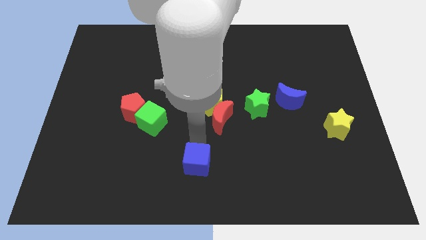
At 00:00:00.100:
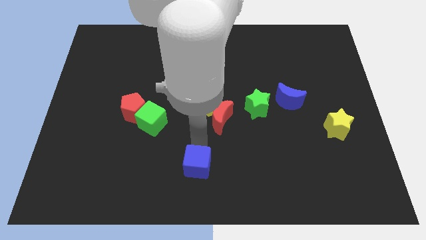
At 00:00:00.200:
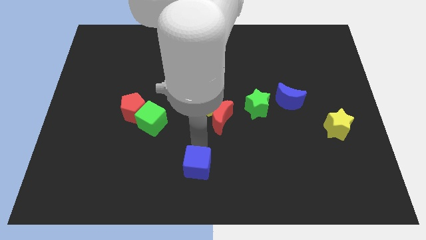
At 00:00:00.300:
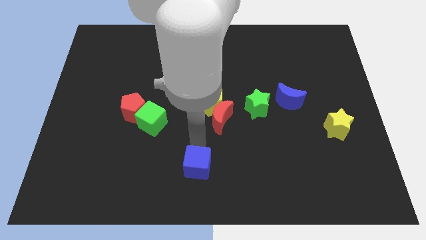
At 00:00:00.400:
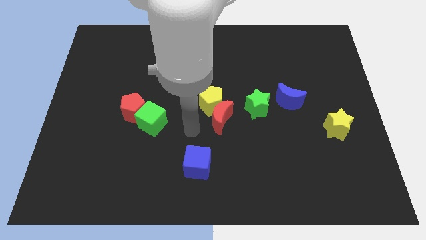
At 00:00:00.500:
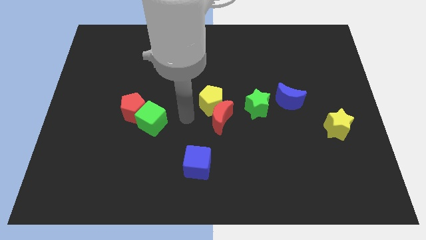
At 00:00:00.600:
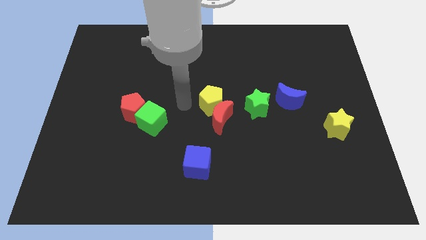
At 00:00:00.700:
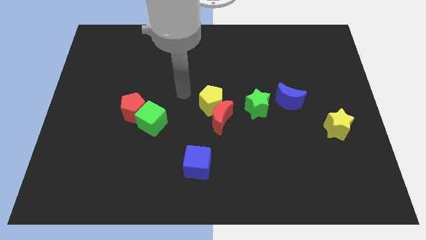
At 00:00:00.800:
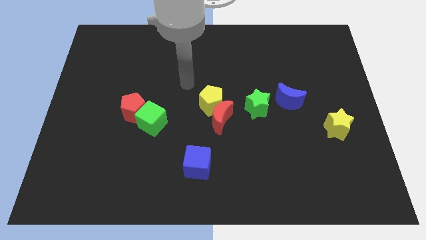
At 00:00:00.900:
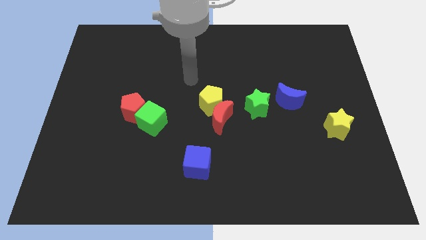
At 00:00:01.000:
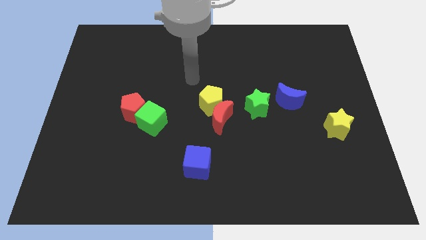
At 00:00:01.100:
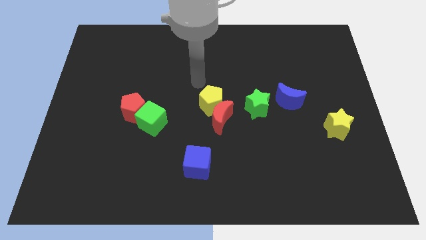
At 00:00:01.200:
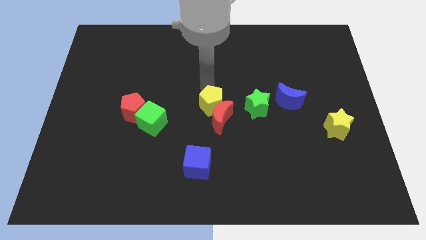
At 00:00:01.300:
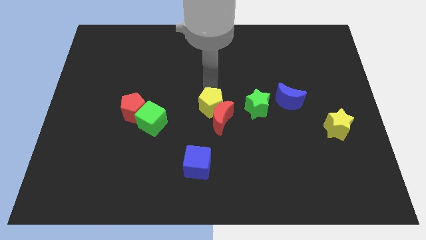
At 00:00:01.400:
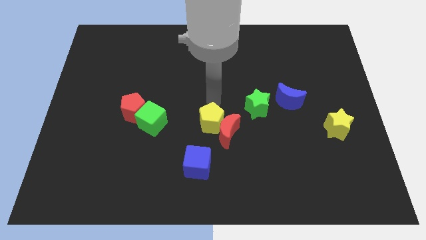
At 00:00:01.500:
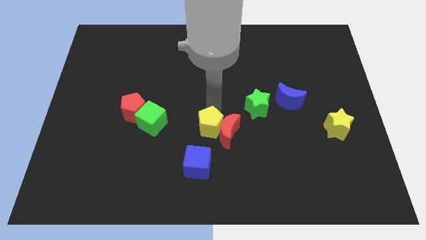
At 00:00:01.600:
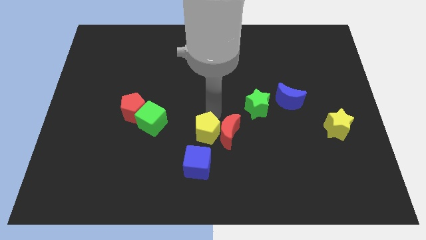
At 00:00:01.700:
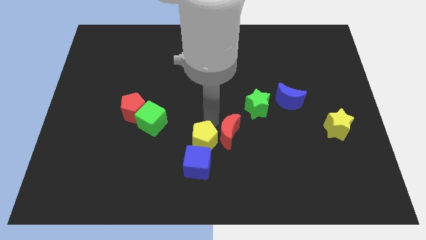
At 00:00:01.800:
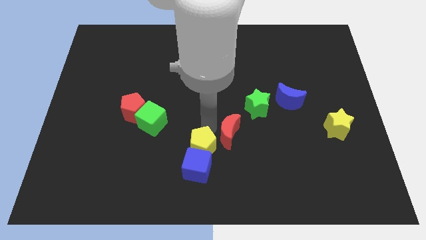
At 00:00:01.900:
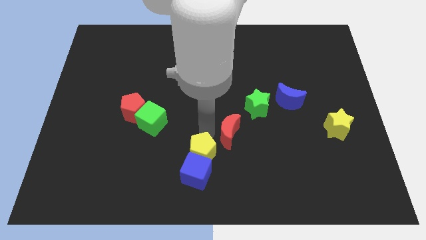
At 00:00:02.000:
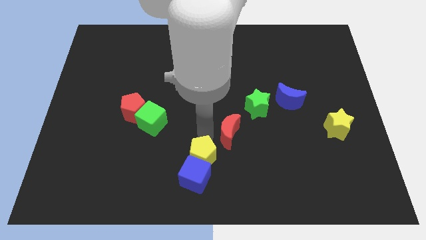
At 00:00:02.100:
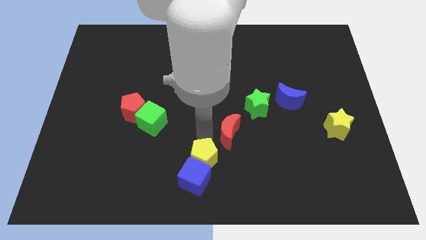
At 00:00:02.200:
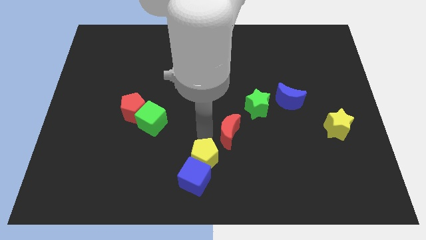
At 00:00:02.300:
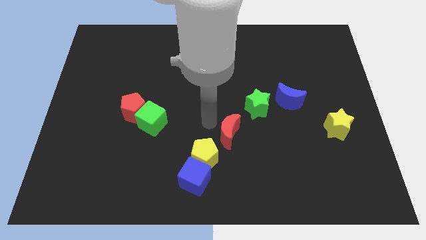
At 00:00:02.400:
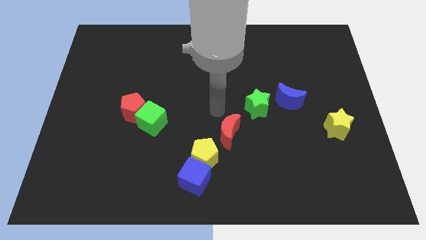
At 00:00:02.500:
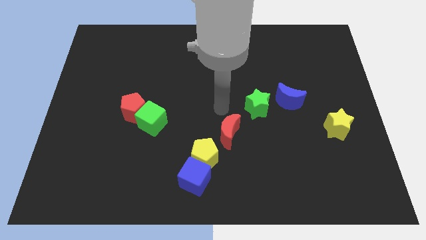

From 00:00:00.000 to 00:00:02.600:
move the yellow pentagon into the blue cube

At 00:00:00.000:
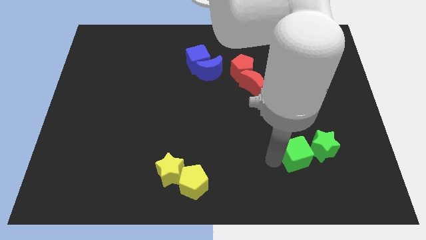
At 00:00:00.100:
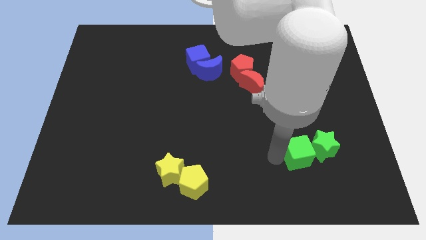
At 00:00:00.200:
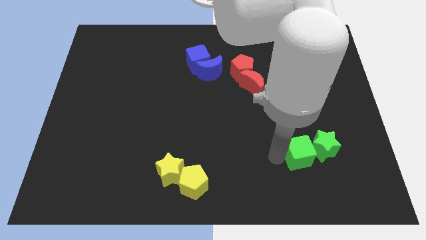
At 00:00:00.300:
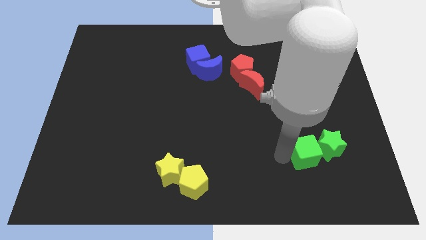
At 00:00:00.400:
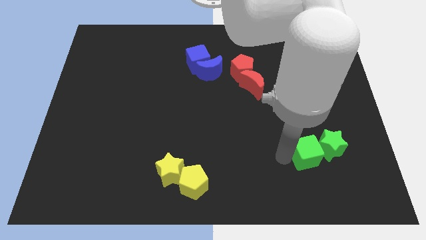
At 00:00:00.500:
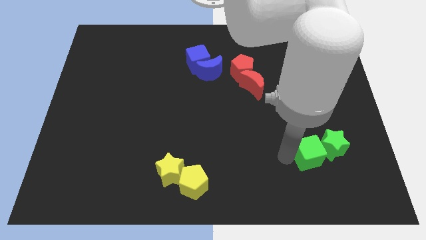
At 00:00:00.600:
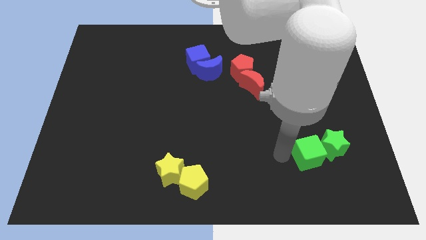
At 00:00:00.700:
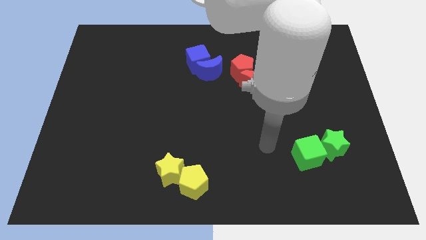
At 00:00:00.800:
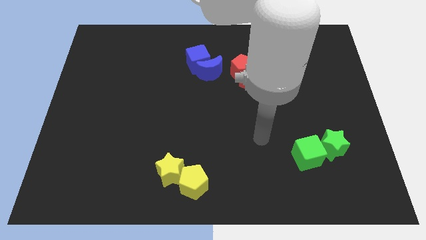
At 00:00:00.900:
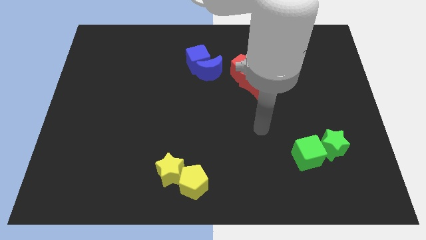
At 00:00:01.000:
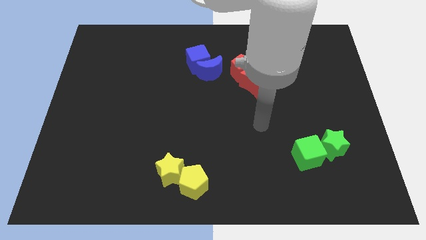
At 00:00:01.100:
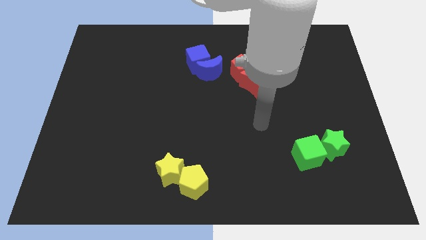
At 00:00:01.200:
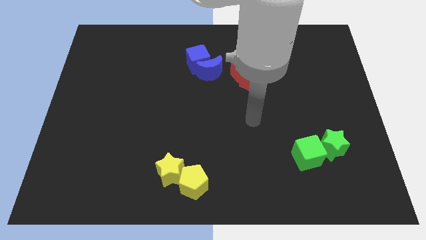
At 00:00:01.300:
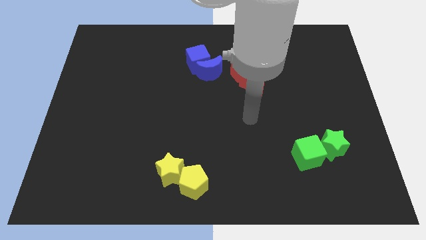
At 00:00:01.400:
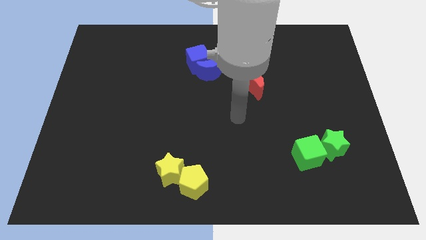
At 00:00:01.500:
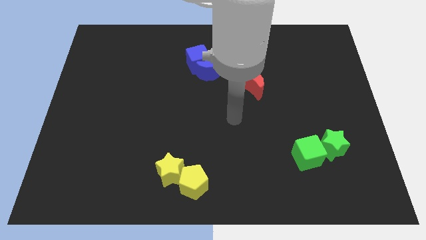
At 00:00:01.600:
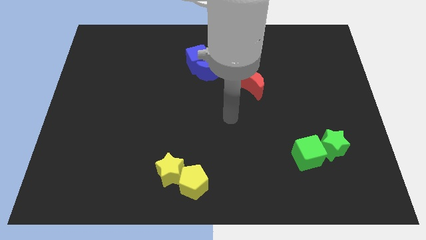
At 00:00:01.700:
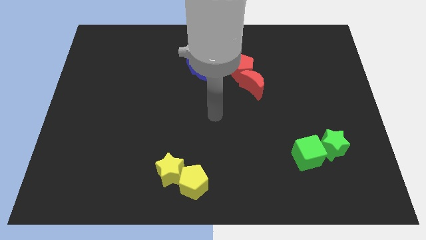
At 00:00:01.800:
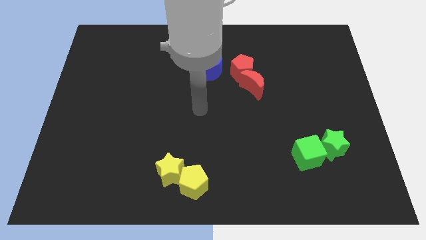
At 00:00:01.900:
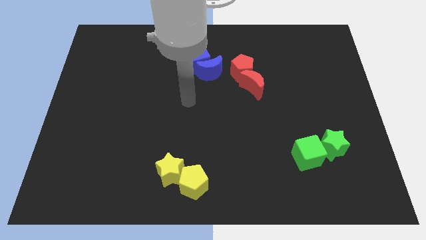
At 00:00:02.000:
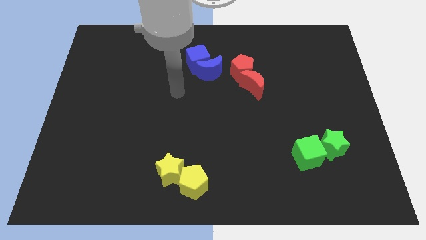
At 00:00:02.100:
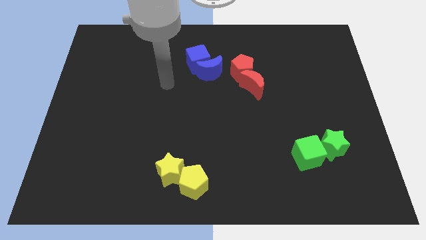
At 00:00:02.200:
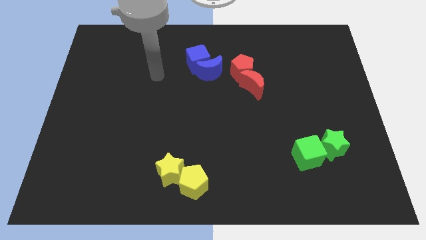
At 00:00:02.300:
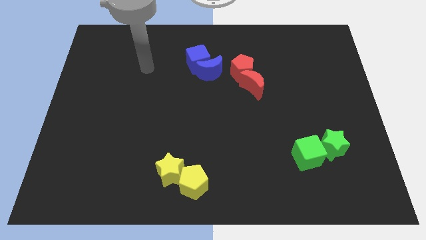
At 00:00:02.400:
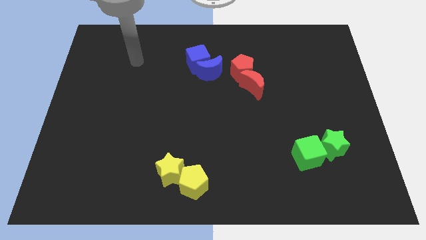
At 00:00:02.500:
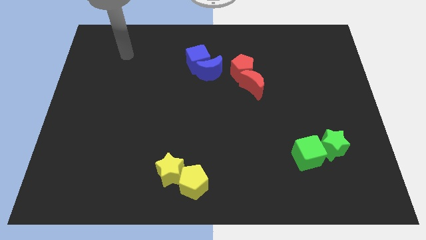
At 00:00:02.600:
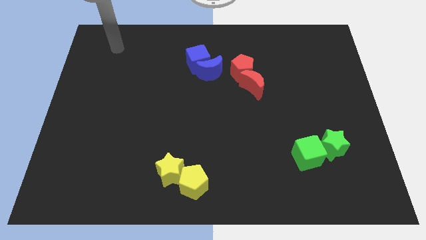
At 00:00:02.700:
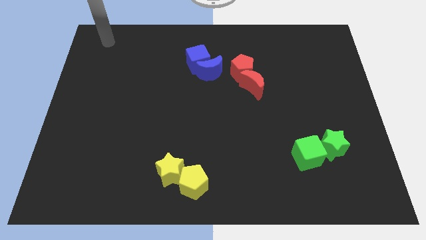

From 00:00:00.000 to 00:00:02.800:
point your arm at the top left corner of the board

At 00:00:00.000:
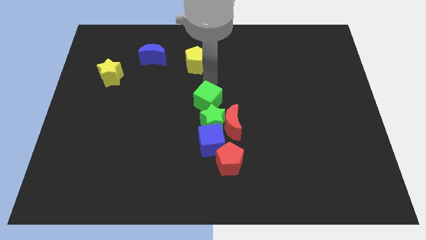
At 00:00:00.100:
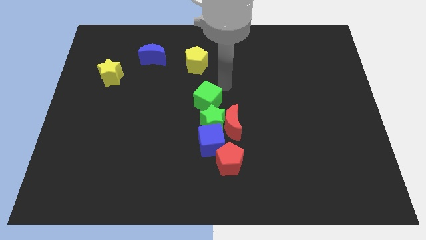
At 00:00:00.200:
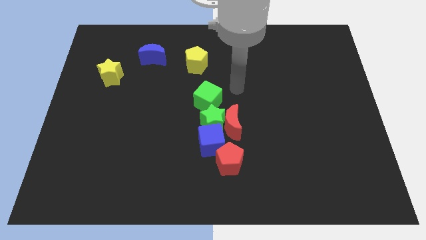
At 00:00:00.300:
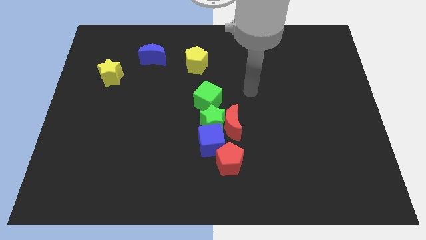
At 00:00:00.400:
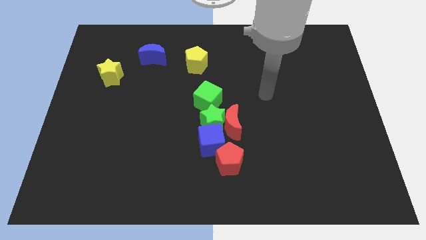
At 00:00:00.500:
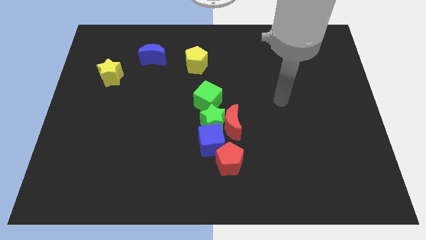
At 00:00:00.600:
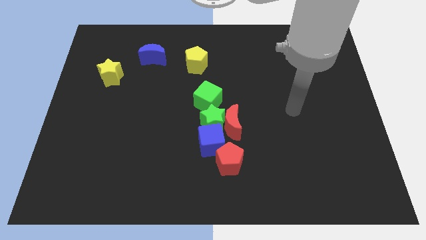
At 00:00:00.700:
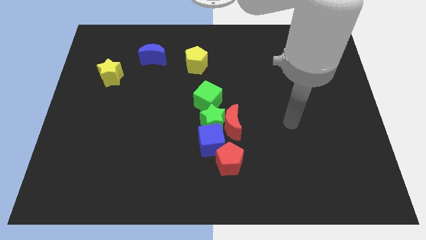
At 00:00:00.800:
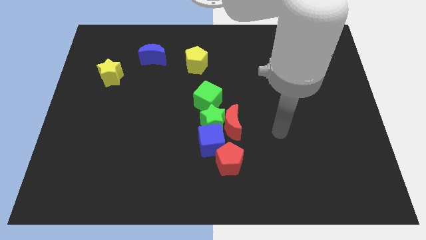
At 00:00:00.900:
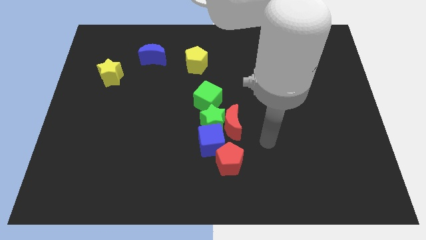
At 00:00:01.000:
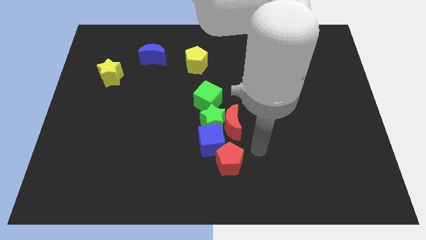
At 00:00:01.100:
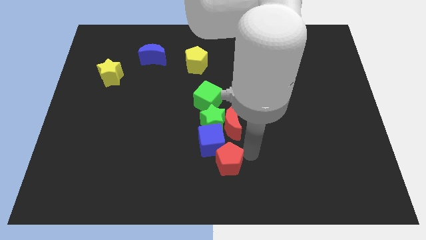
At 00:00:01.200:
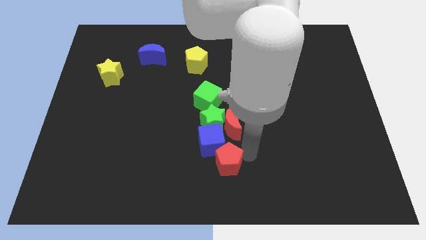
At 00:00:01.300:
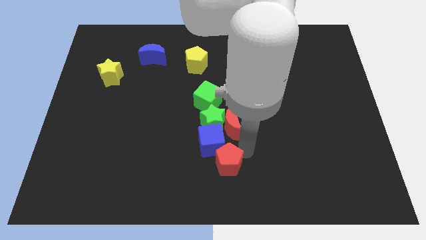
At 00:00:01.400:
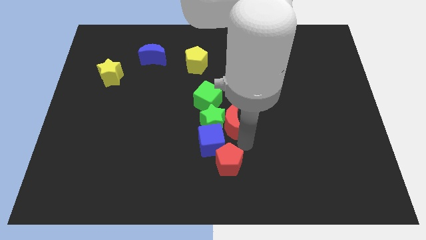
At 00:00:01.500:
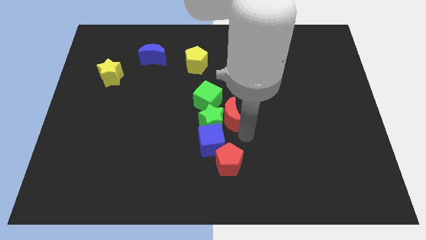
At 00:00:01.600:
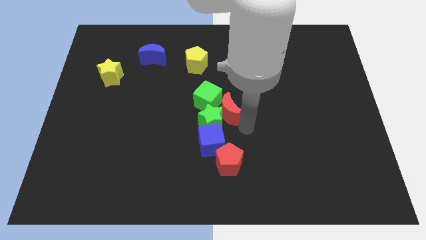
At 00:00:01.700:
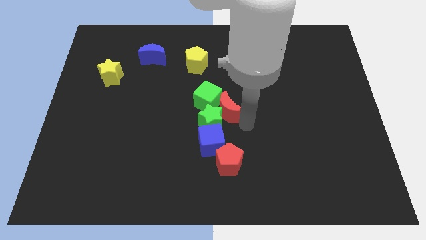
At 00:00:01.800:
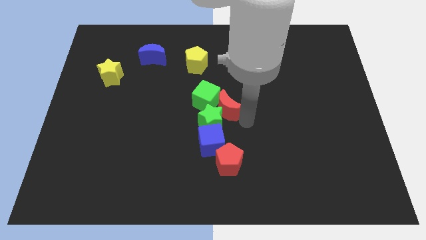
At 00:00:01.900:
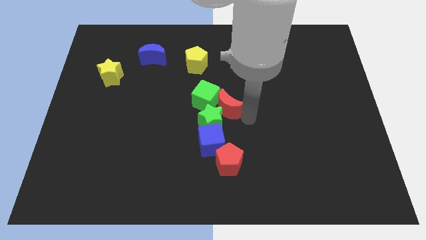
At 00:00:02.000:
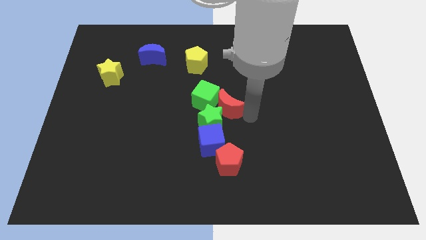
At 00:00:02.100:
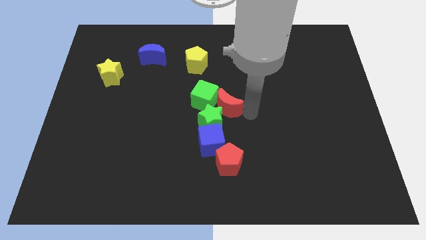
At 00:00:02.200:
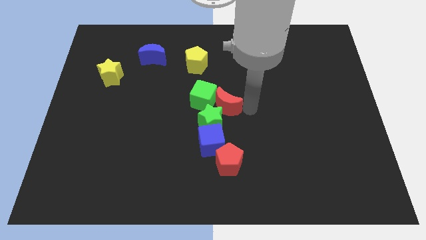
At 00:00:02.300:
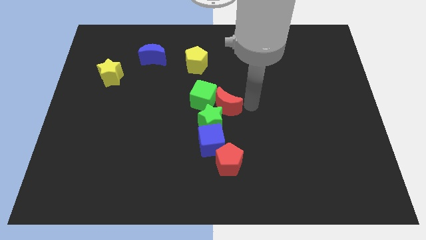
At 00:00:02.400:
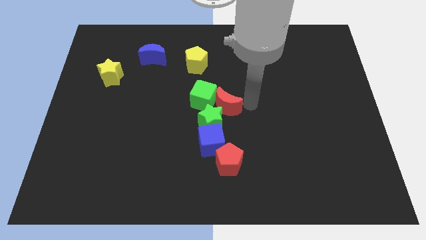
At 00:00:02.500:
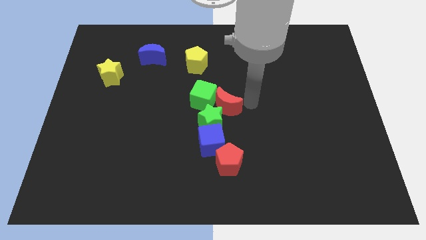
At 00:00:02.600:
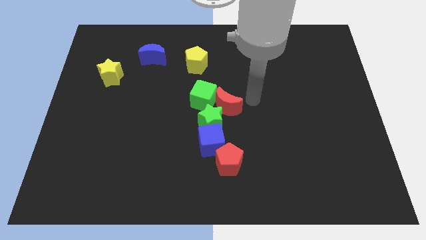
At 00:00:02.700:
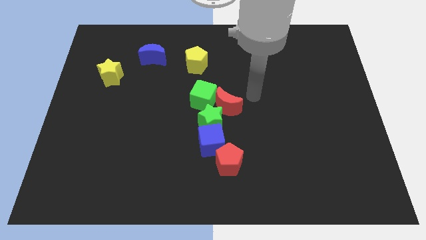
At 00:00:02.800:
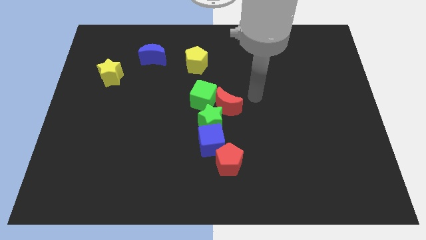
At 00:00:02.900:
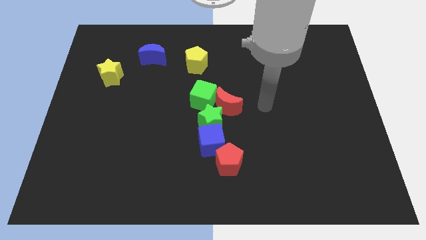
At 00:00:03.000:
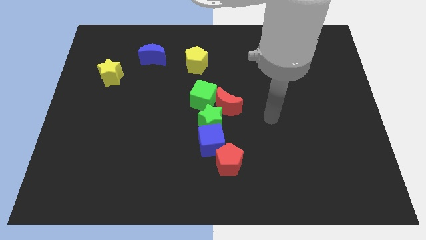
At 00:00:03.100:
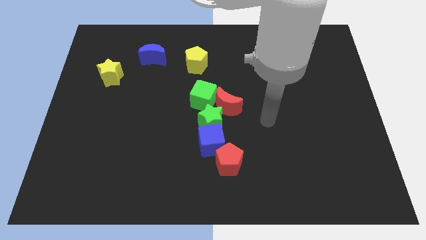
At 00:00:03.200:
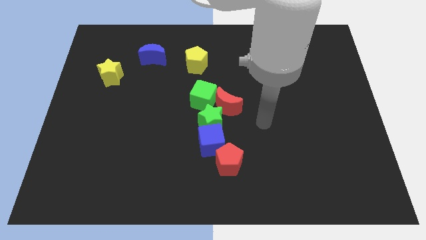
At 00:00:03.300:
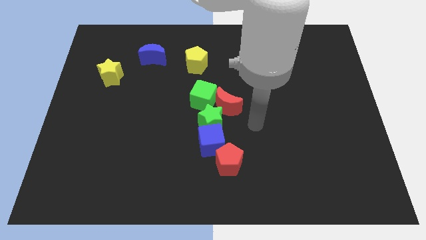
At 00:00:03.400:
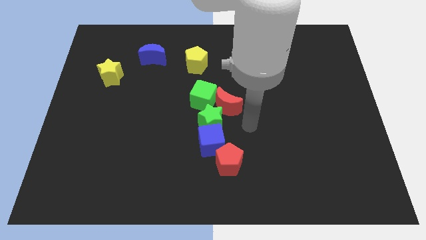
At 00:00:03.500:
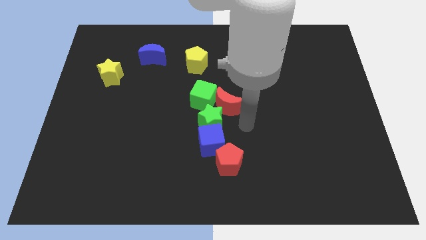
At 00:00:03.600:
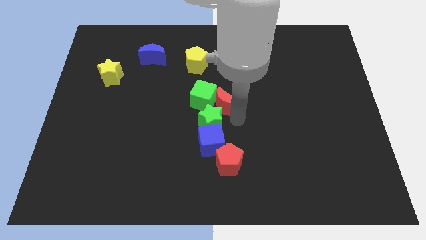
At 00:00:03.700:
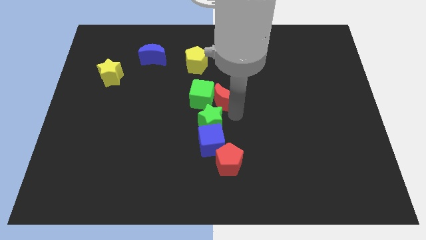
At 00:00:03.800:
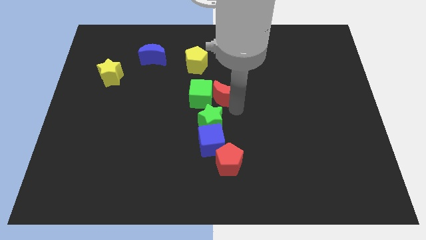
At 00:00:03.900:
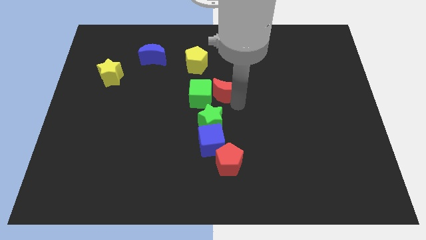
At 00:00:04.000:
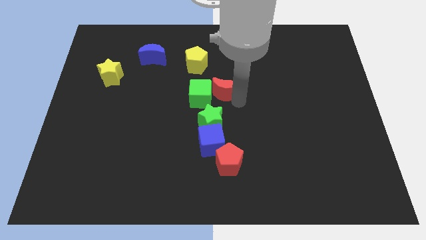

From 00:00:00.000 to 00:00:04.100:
push the red crescent to the right of the green cube
